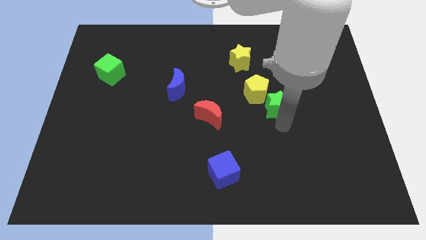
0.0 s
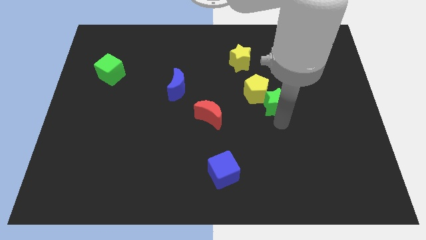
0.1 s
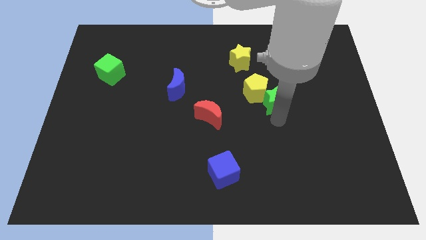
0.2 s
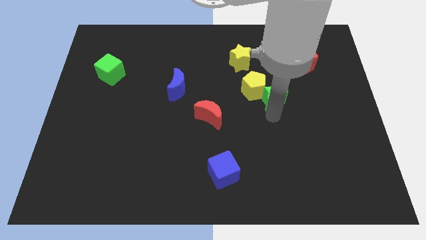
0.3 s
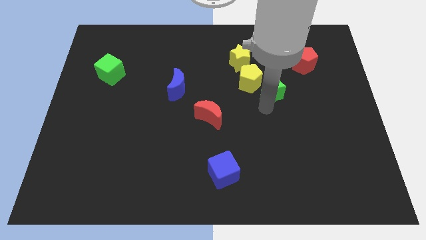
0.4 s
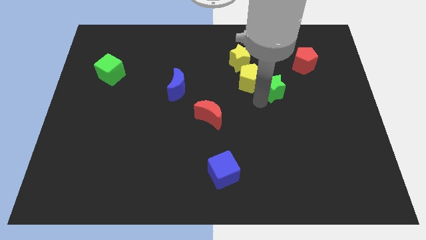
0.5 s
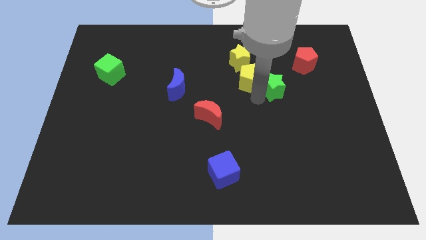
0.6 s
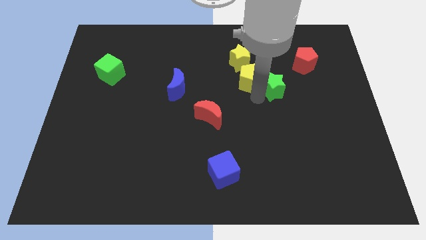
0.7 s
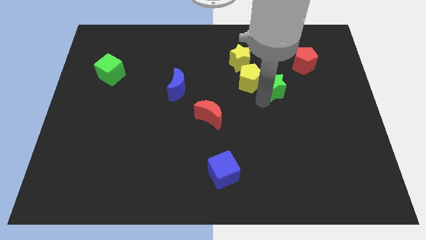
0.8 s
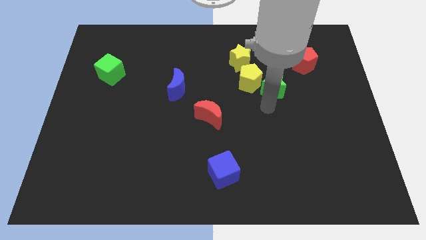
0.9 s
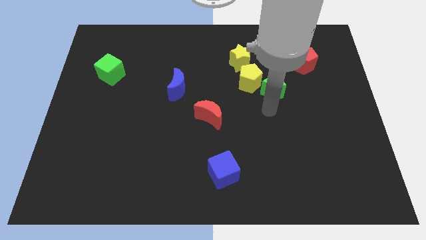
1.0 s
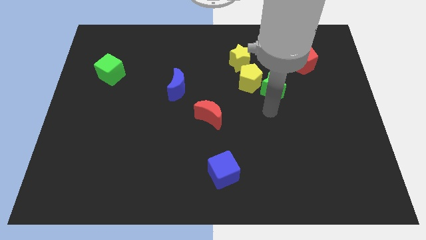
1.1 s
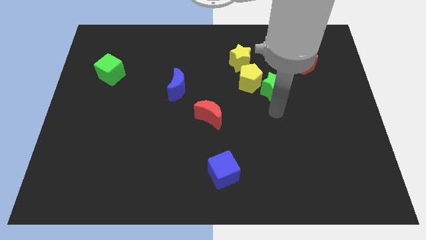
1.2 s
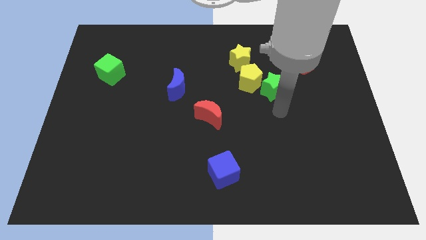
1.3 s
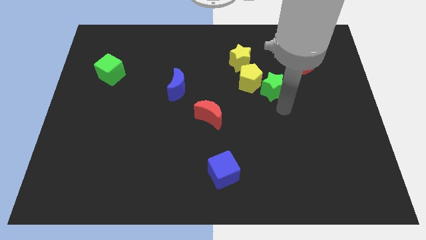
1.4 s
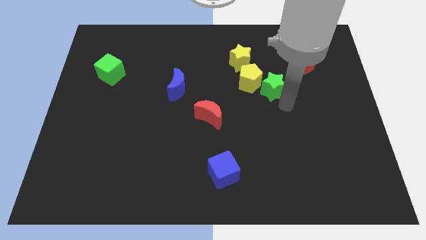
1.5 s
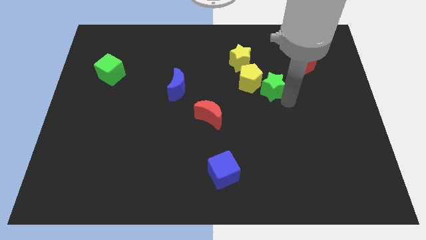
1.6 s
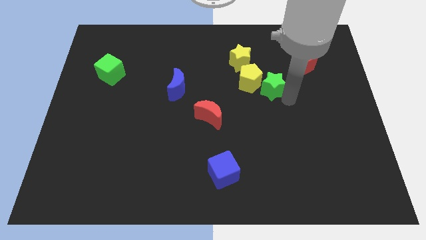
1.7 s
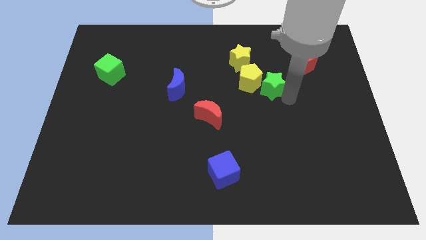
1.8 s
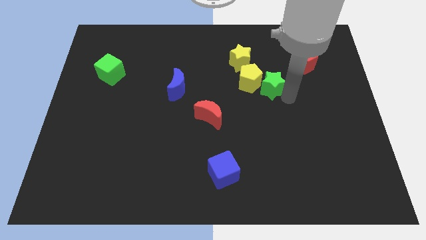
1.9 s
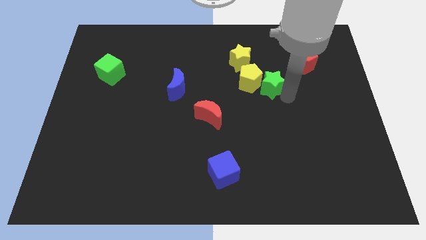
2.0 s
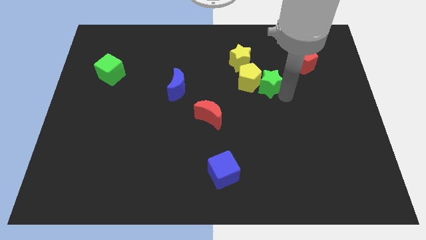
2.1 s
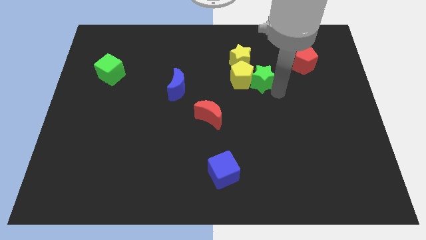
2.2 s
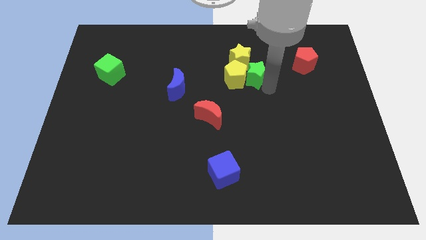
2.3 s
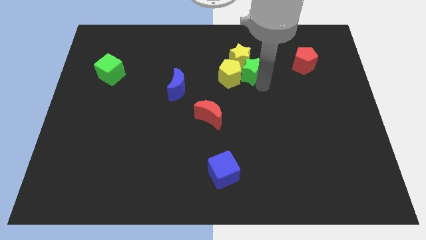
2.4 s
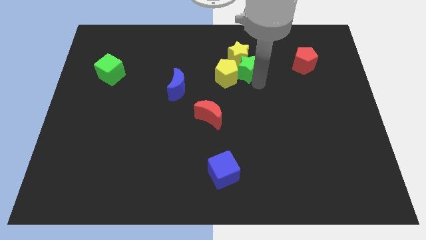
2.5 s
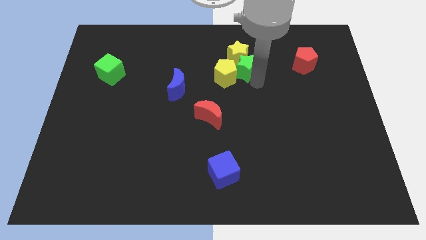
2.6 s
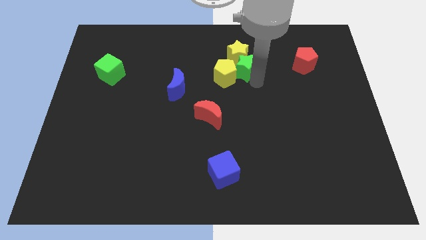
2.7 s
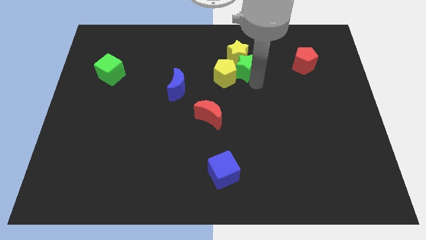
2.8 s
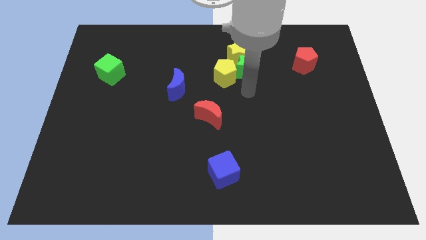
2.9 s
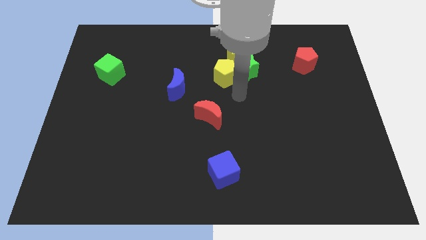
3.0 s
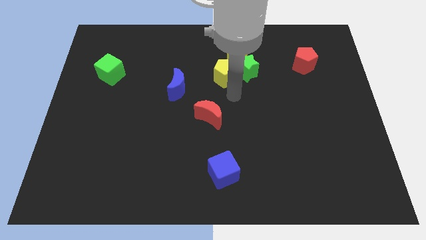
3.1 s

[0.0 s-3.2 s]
push the green star into the yellow star

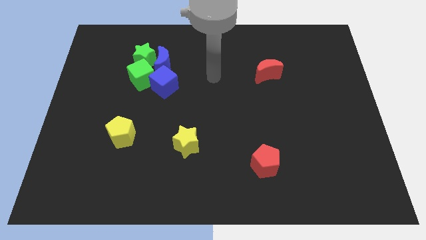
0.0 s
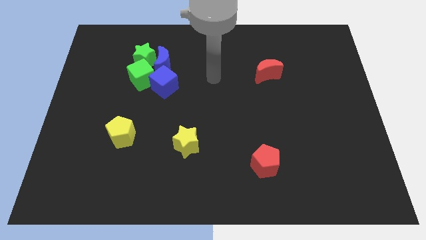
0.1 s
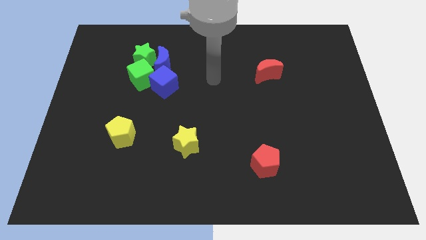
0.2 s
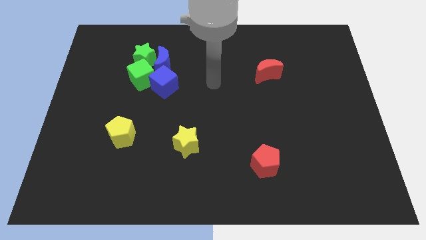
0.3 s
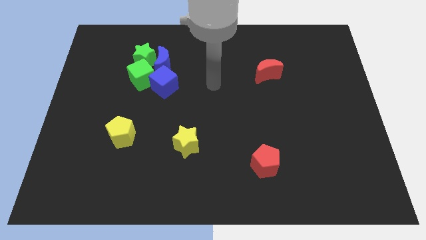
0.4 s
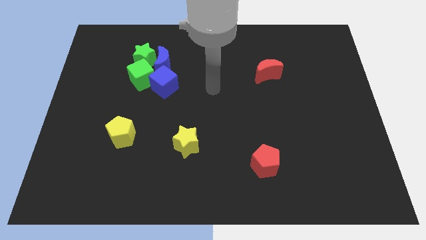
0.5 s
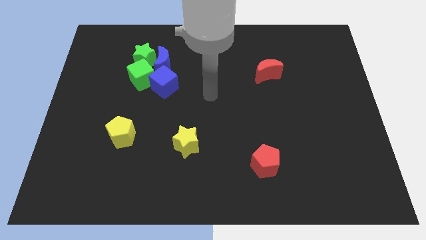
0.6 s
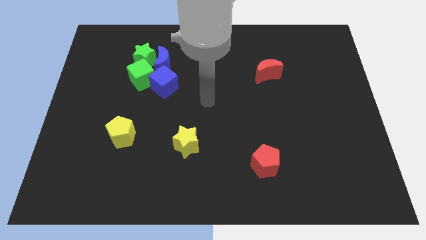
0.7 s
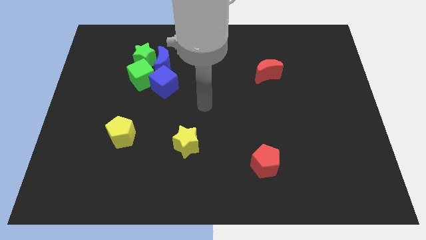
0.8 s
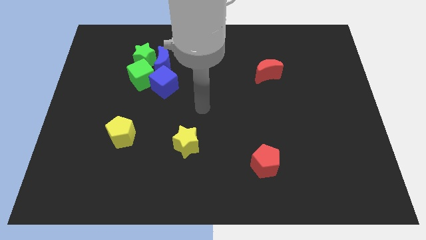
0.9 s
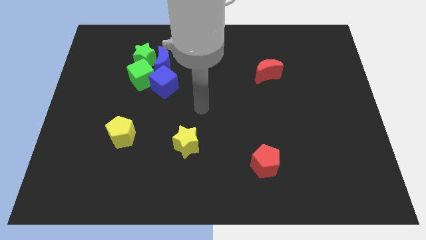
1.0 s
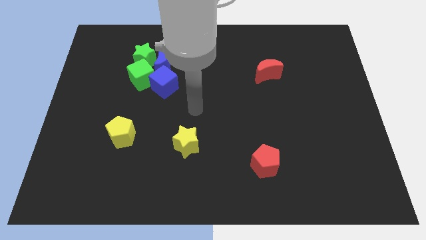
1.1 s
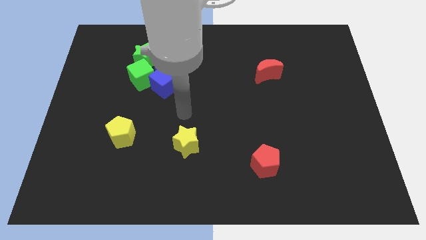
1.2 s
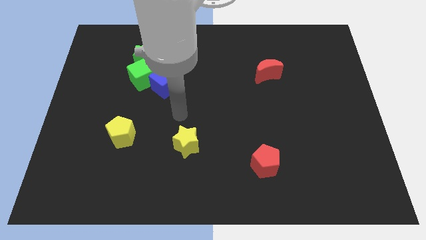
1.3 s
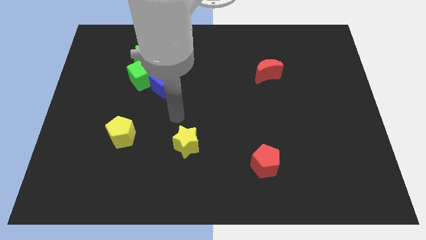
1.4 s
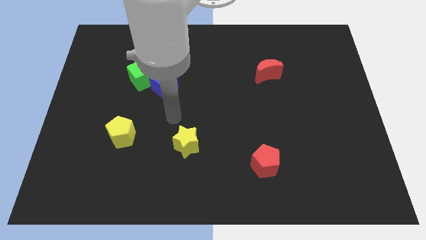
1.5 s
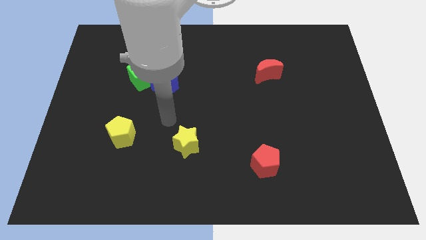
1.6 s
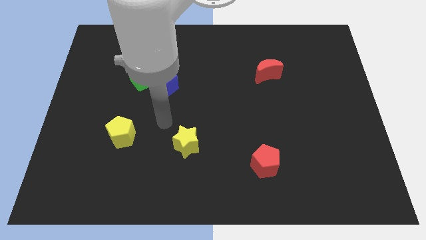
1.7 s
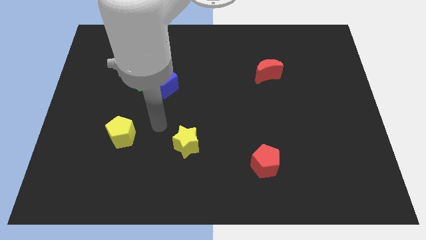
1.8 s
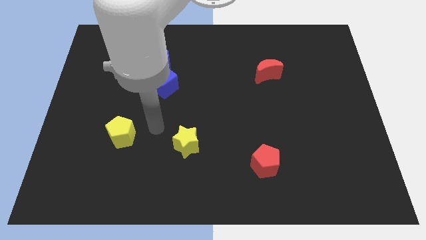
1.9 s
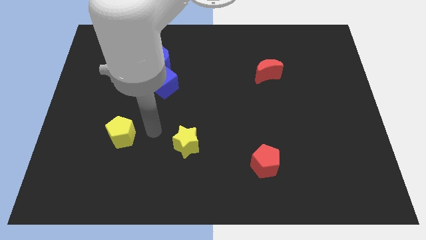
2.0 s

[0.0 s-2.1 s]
move your hand in between the yellow pentagon and yellow star

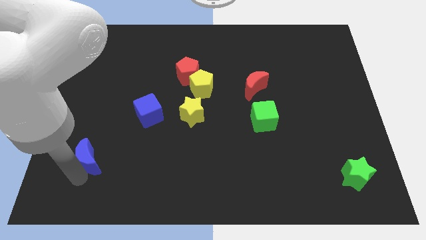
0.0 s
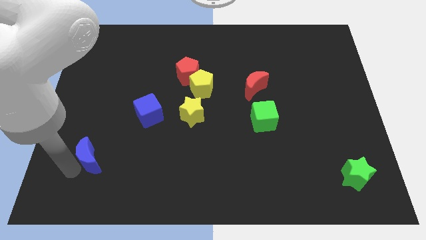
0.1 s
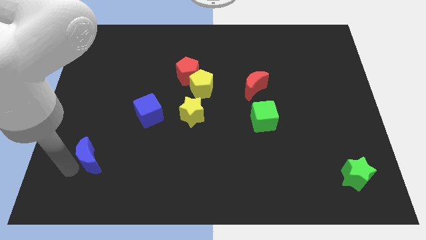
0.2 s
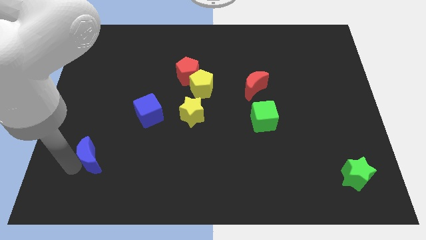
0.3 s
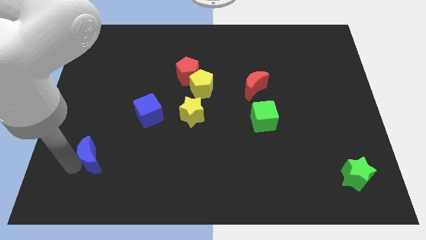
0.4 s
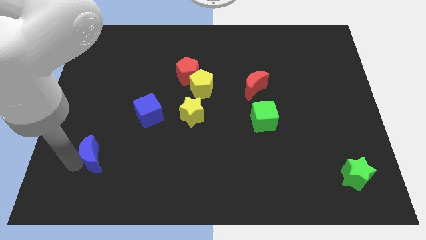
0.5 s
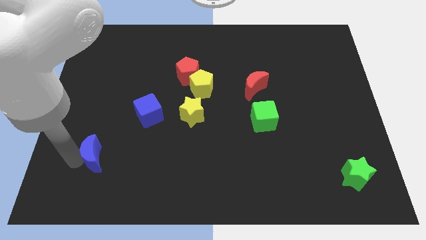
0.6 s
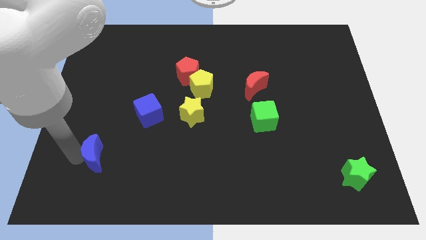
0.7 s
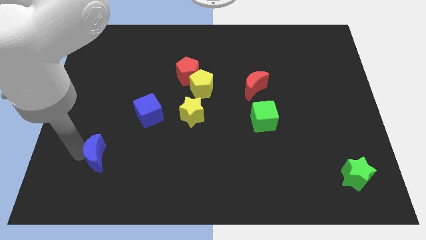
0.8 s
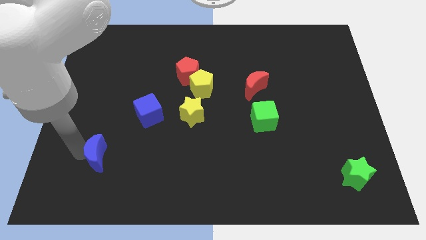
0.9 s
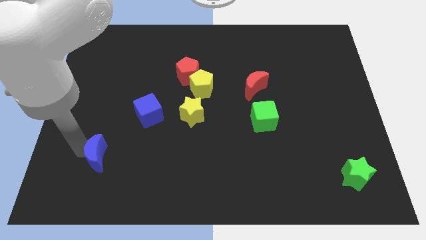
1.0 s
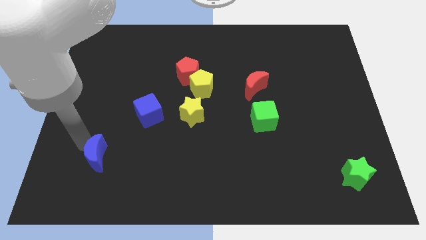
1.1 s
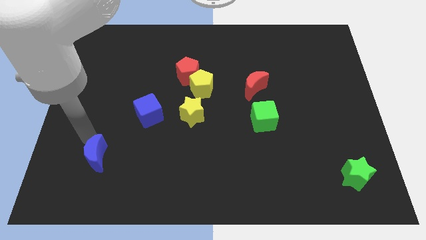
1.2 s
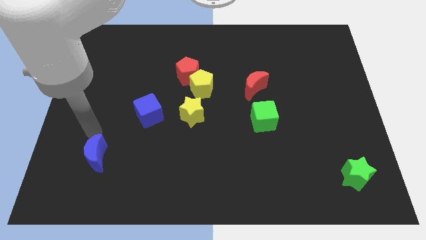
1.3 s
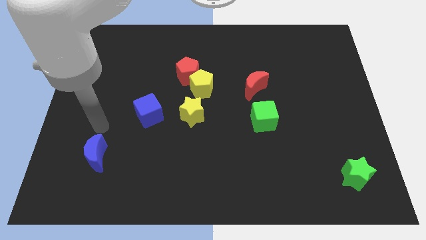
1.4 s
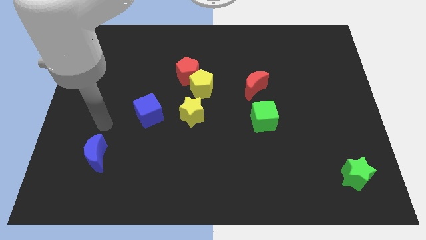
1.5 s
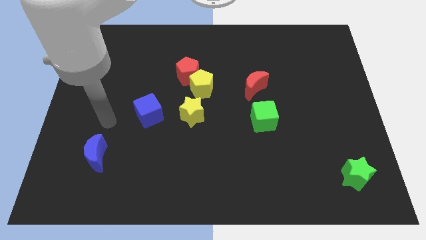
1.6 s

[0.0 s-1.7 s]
push the blue moon diagonally to the bottom left of the blue cube

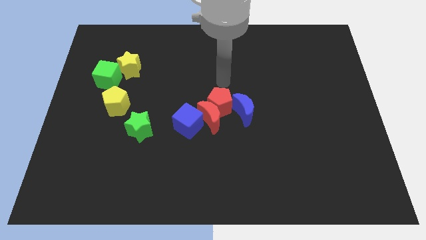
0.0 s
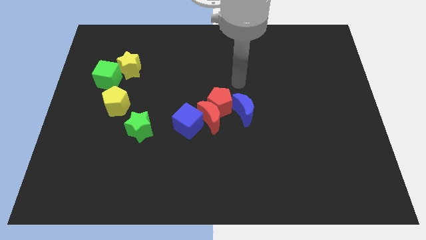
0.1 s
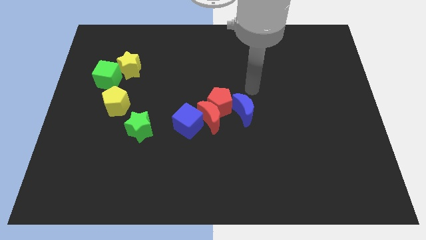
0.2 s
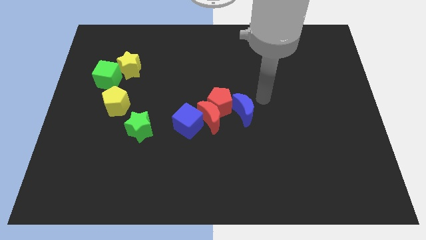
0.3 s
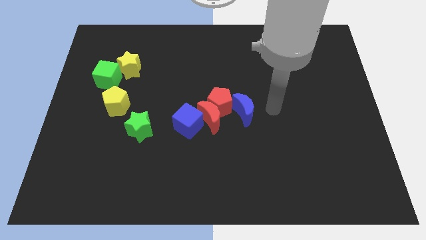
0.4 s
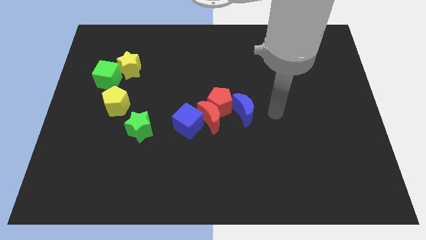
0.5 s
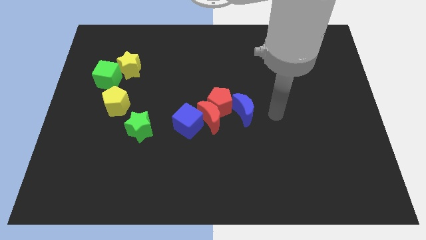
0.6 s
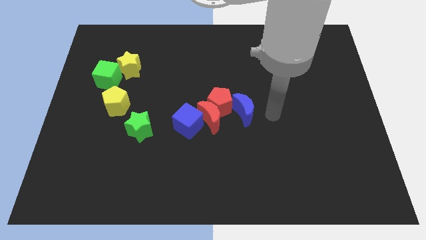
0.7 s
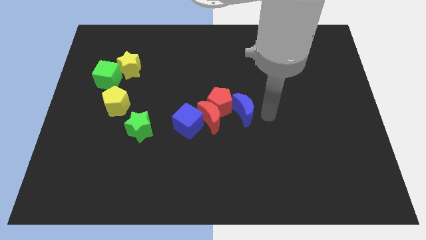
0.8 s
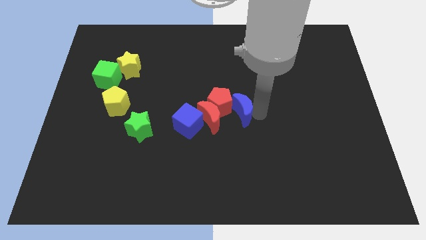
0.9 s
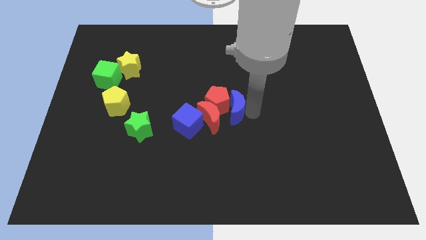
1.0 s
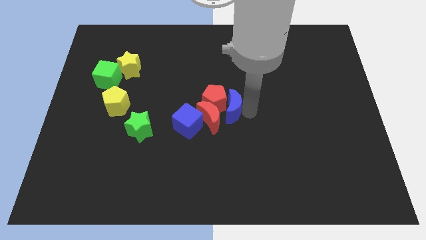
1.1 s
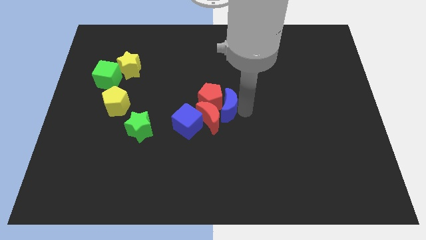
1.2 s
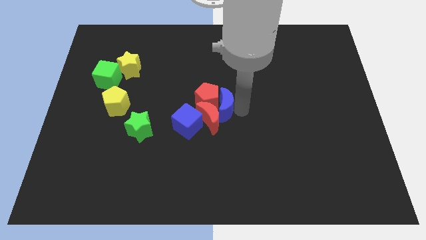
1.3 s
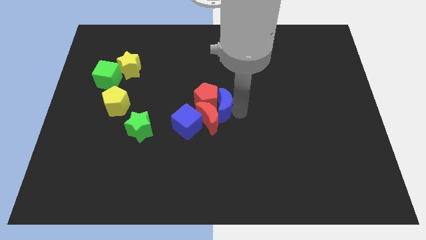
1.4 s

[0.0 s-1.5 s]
drag the blue moon into the red pentagon

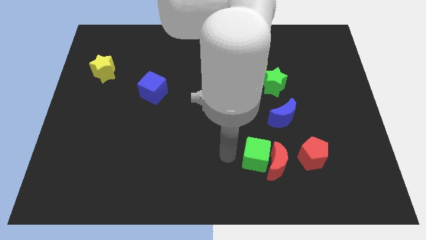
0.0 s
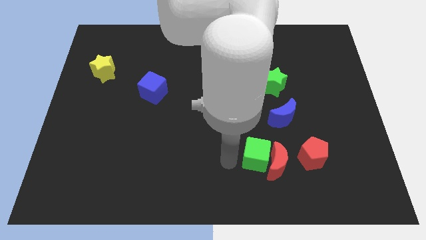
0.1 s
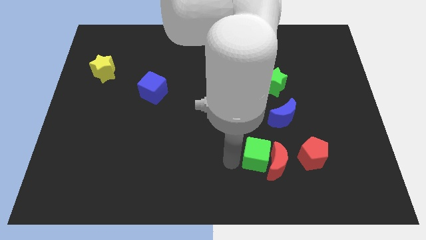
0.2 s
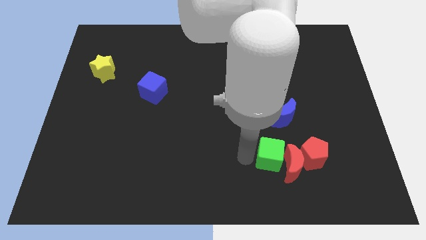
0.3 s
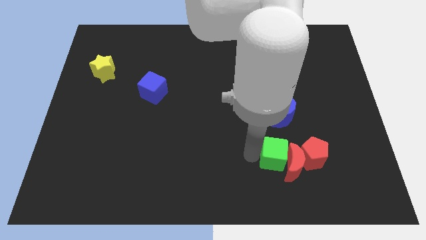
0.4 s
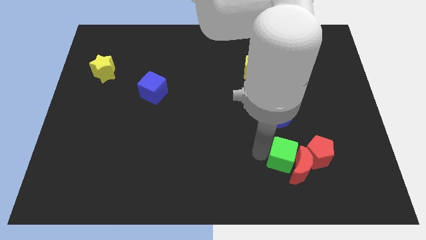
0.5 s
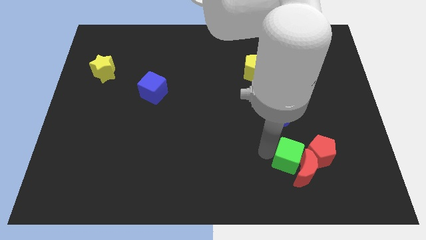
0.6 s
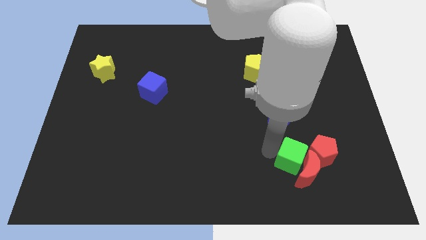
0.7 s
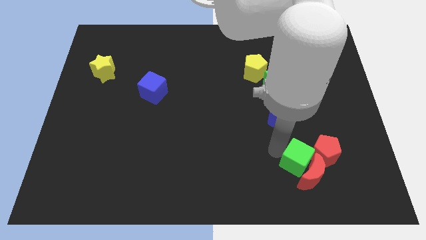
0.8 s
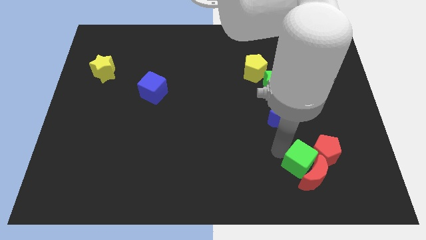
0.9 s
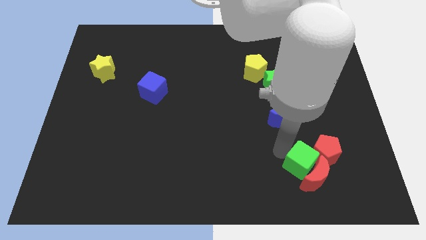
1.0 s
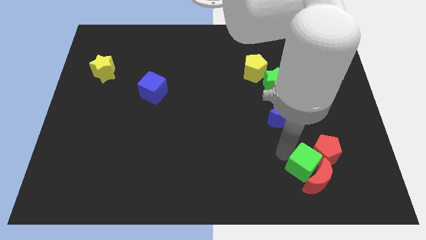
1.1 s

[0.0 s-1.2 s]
push the green cube along with red moon into the red pentagon
